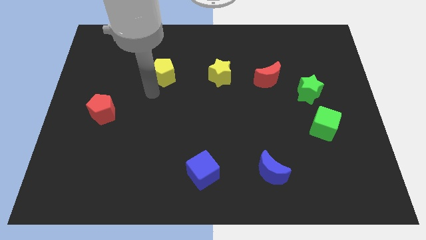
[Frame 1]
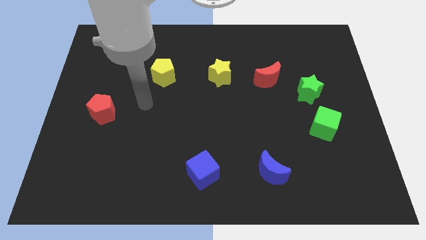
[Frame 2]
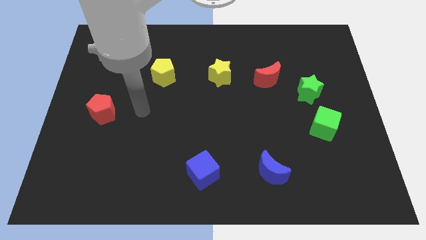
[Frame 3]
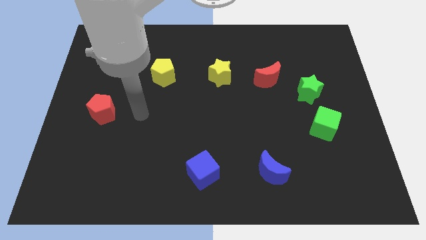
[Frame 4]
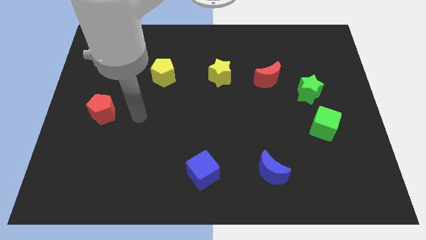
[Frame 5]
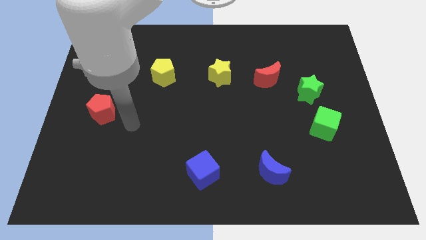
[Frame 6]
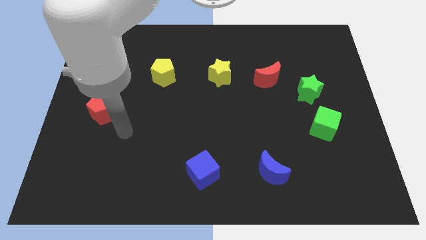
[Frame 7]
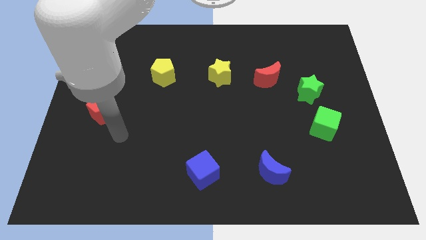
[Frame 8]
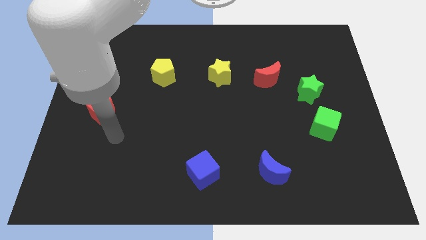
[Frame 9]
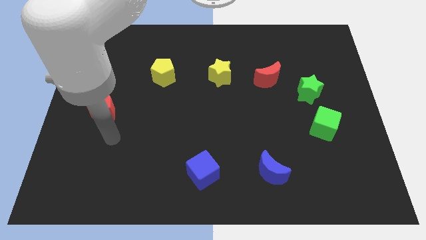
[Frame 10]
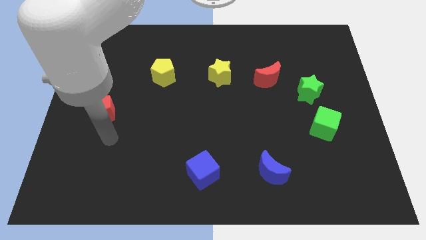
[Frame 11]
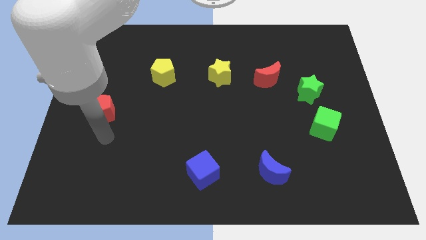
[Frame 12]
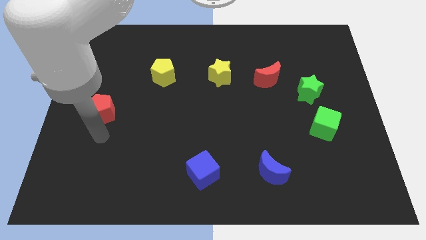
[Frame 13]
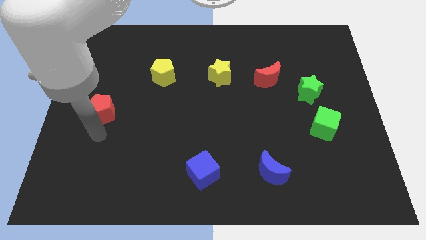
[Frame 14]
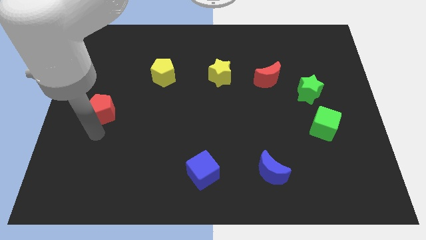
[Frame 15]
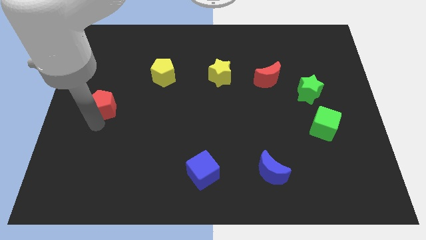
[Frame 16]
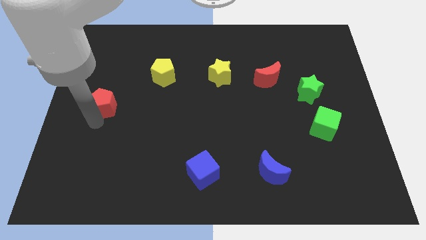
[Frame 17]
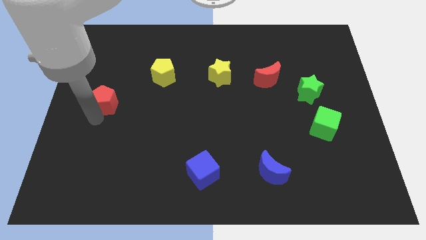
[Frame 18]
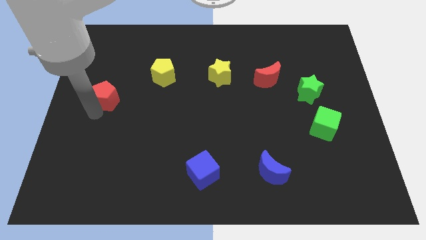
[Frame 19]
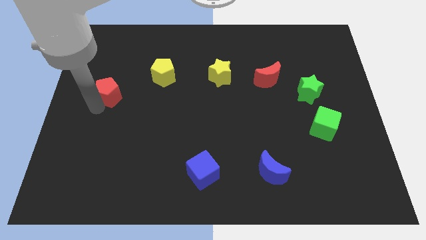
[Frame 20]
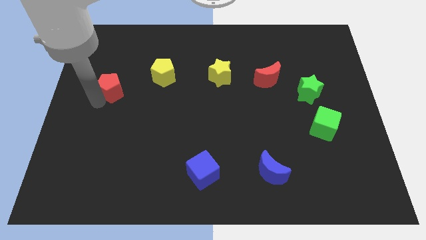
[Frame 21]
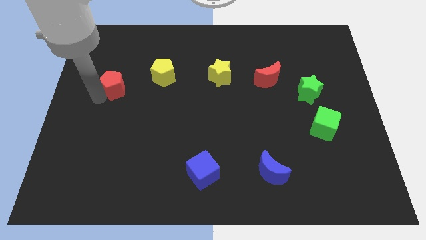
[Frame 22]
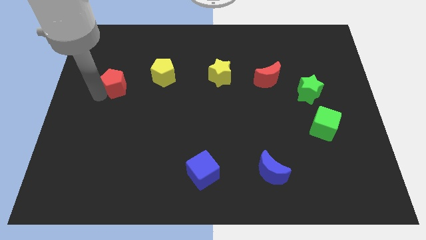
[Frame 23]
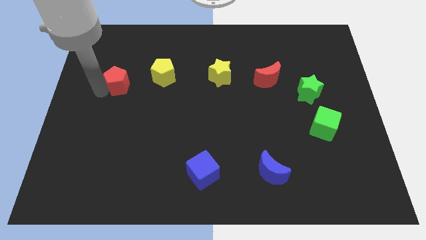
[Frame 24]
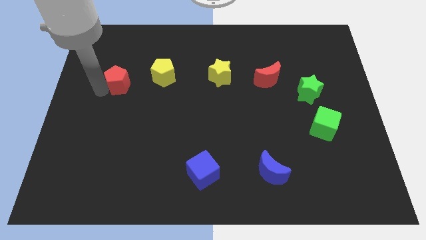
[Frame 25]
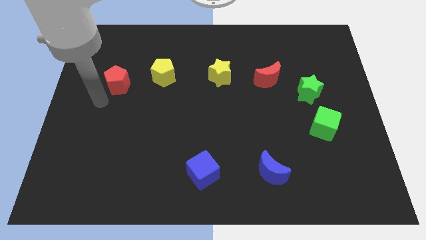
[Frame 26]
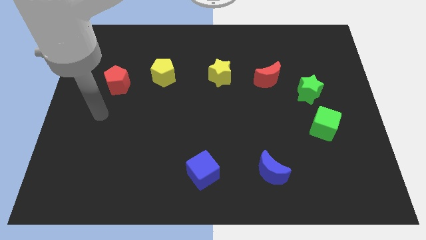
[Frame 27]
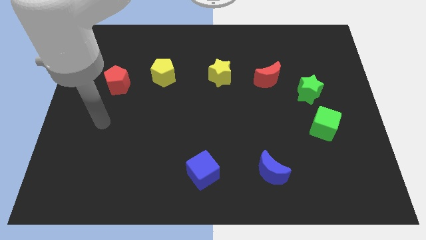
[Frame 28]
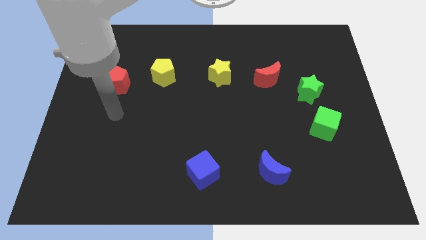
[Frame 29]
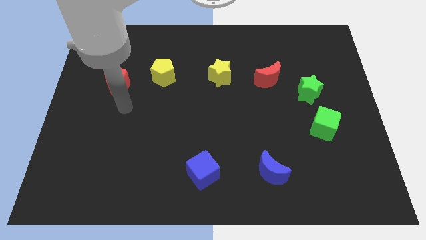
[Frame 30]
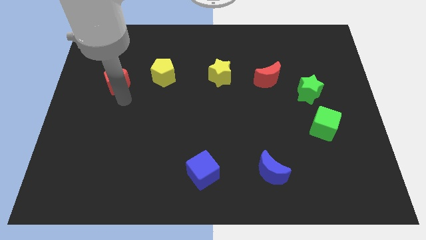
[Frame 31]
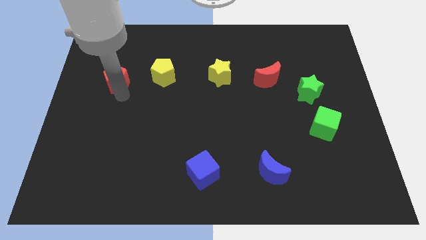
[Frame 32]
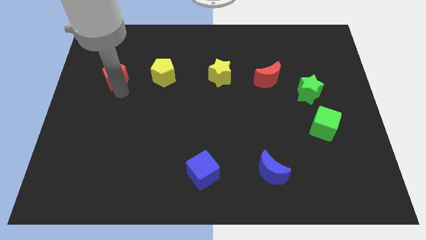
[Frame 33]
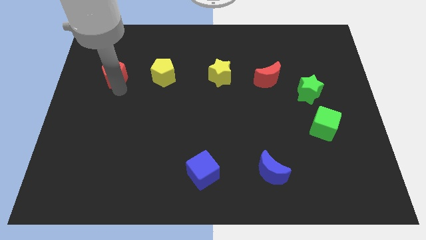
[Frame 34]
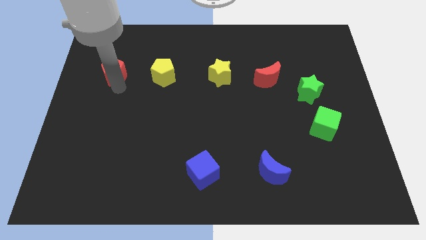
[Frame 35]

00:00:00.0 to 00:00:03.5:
place the red pentagon parallel to yellow pentagon

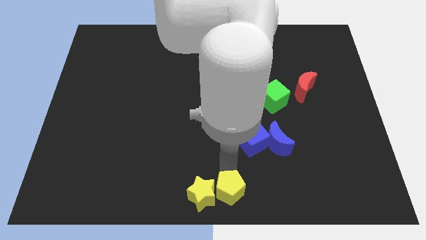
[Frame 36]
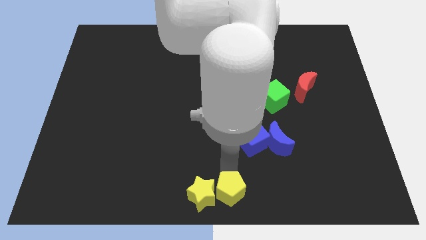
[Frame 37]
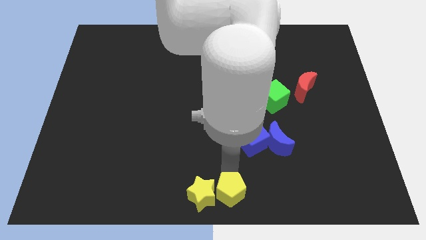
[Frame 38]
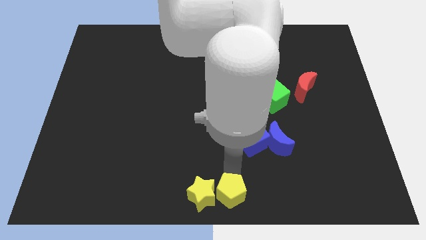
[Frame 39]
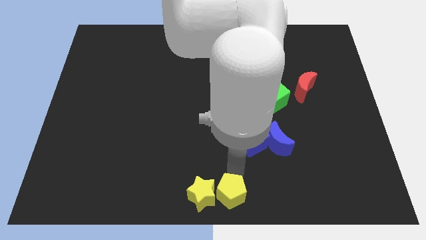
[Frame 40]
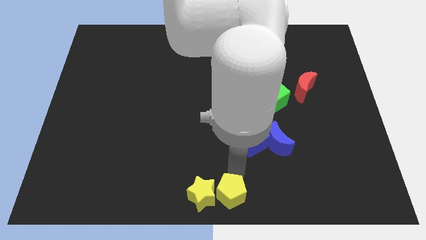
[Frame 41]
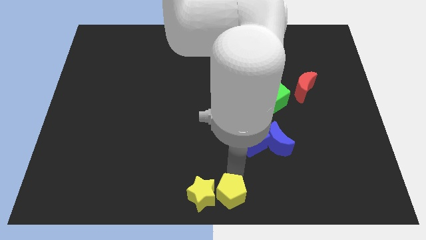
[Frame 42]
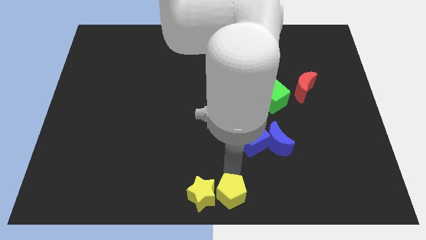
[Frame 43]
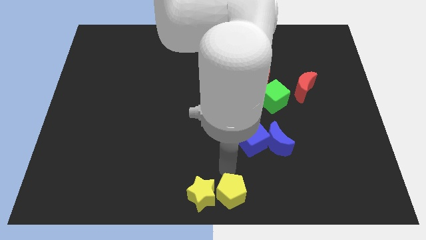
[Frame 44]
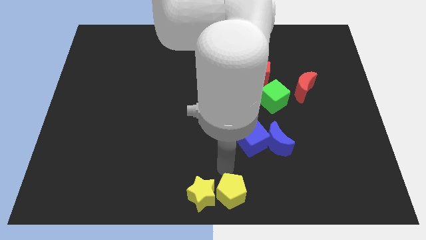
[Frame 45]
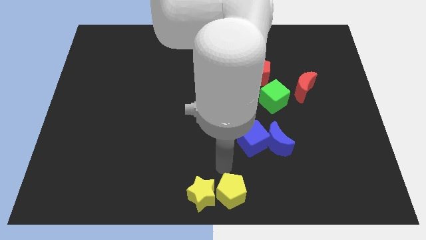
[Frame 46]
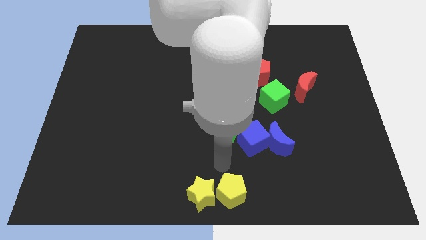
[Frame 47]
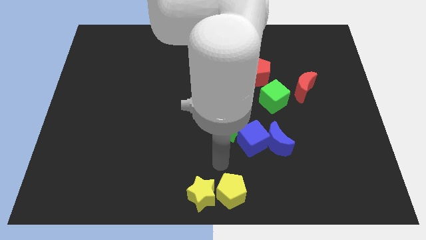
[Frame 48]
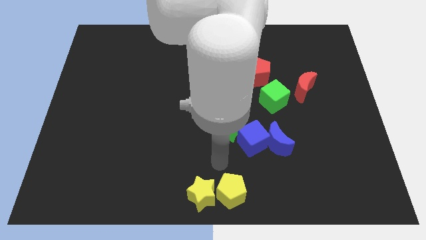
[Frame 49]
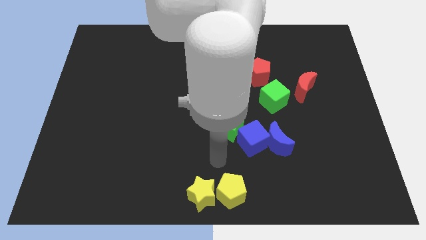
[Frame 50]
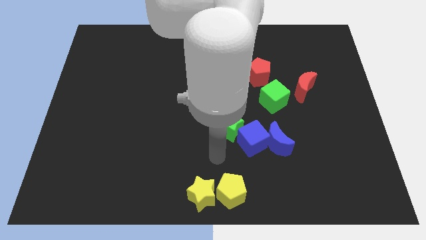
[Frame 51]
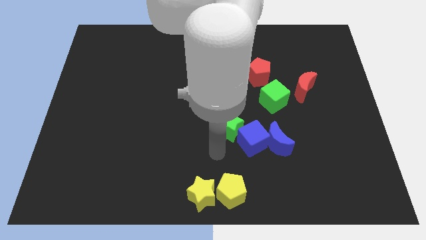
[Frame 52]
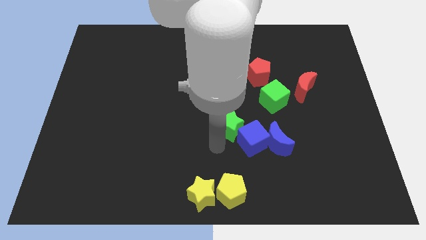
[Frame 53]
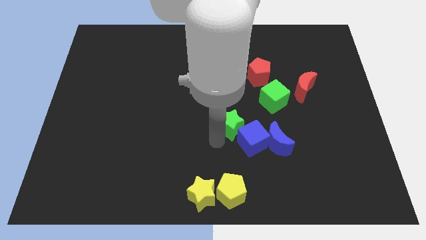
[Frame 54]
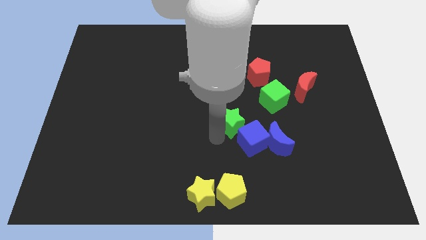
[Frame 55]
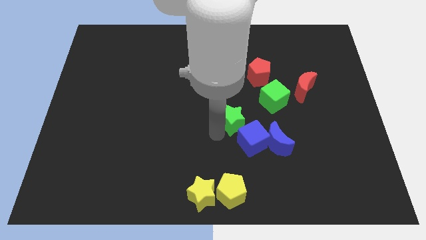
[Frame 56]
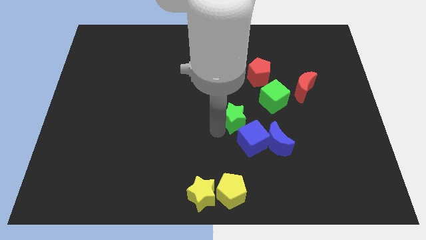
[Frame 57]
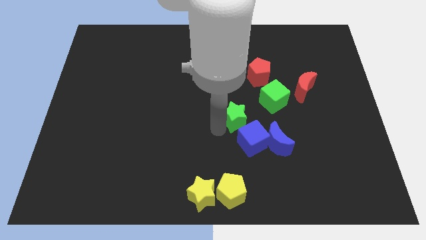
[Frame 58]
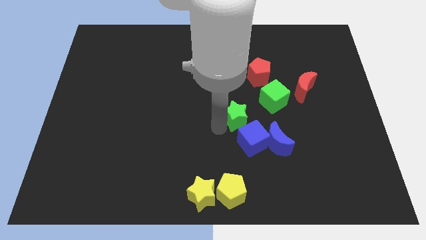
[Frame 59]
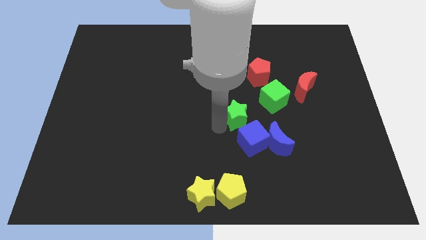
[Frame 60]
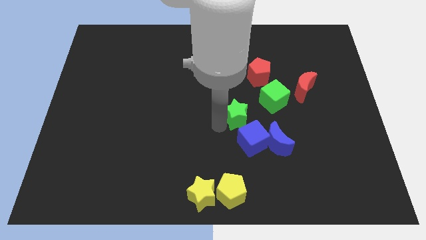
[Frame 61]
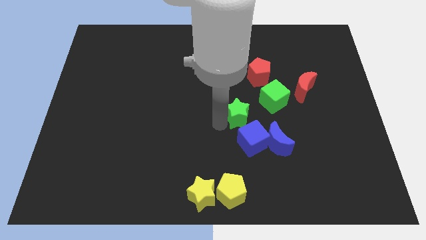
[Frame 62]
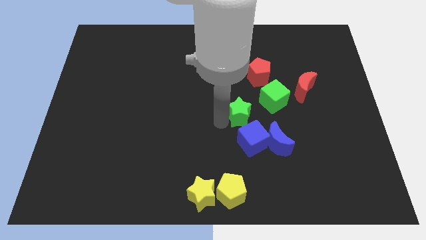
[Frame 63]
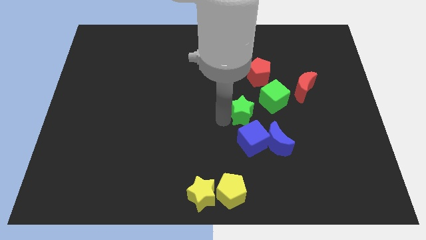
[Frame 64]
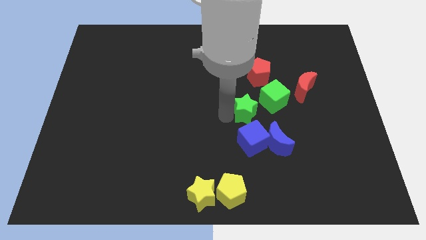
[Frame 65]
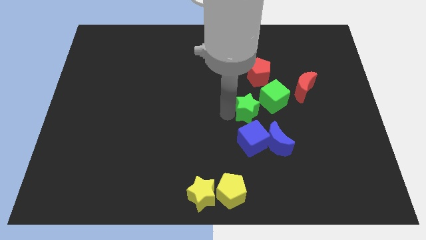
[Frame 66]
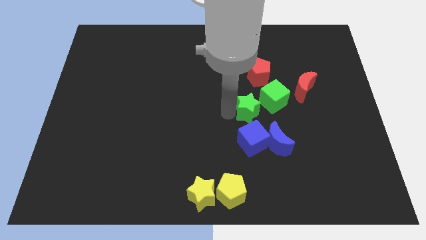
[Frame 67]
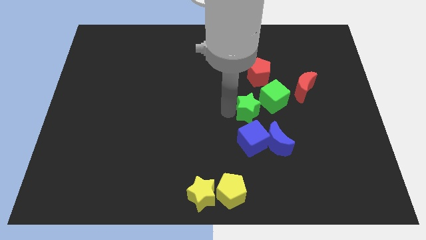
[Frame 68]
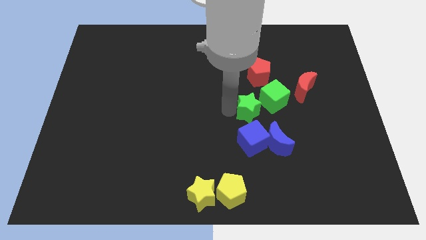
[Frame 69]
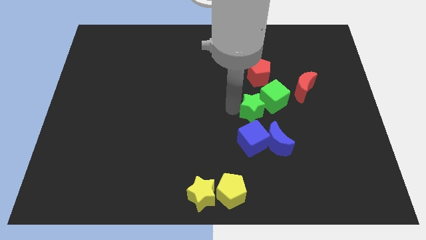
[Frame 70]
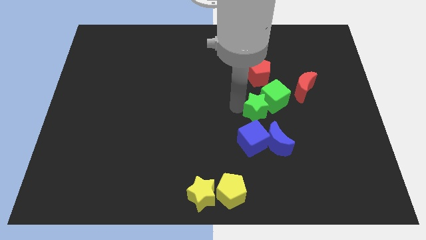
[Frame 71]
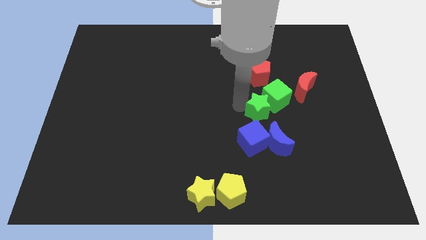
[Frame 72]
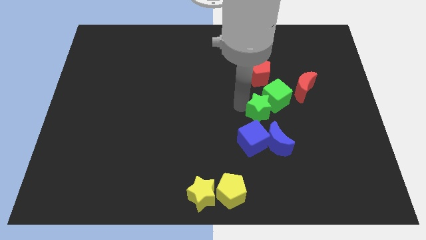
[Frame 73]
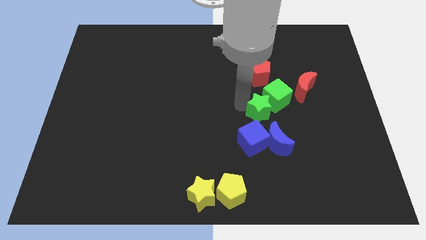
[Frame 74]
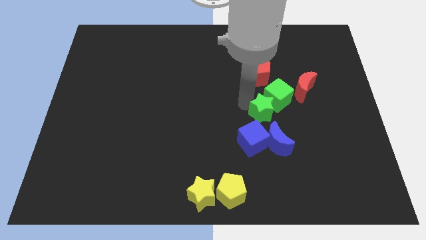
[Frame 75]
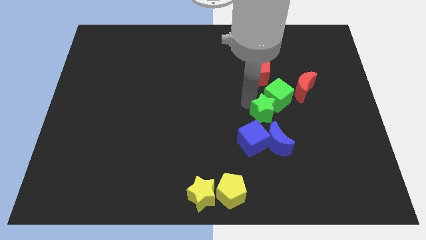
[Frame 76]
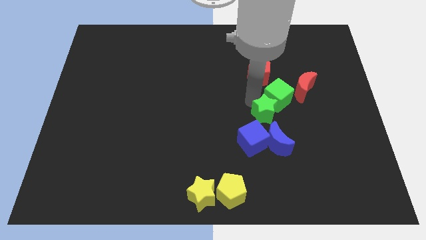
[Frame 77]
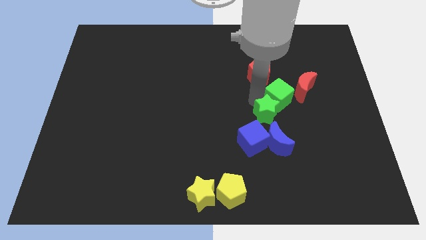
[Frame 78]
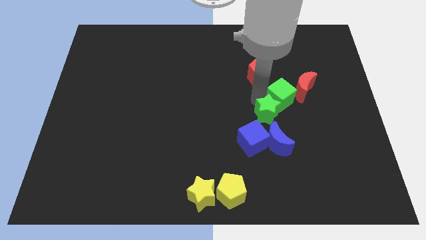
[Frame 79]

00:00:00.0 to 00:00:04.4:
move the green star into the green cube

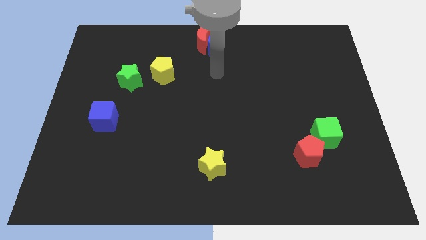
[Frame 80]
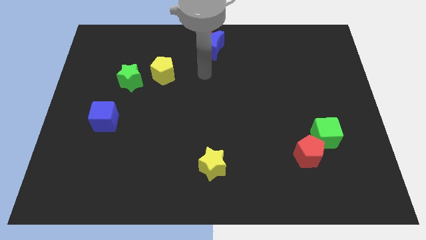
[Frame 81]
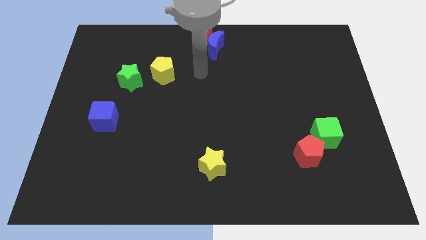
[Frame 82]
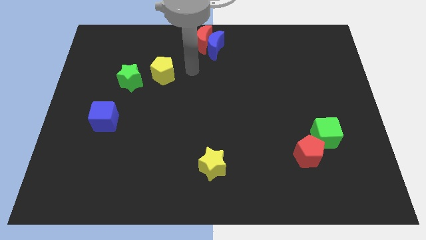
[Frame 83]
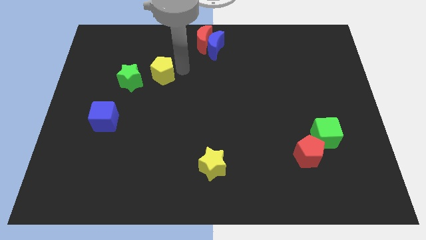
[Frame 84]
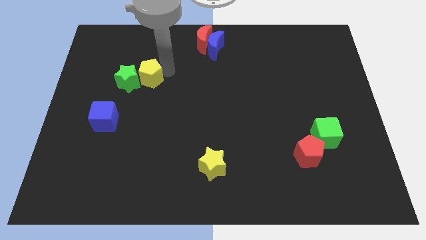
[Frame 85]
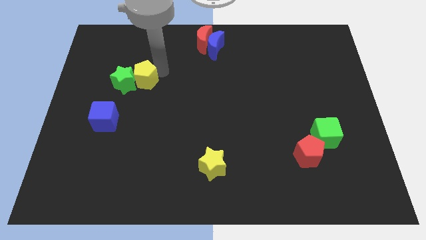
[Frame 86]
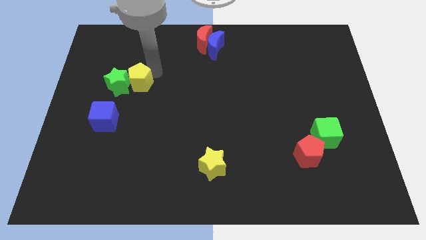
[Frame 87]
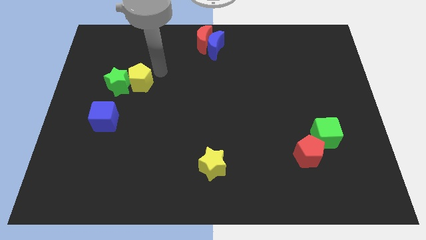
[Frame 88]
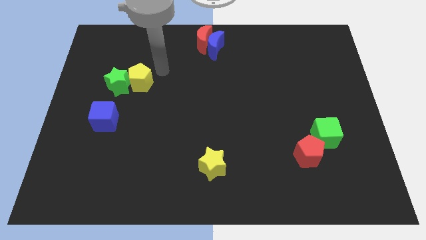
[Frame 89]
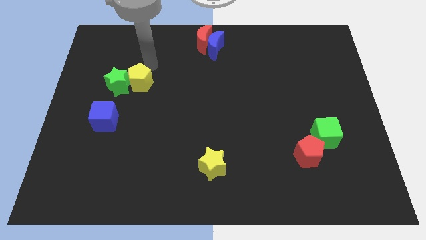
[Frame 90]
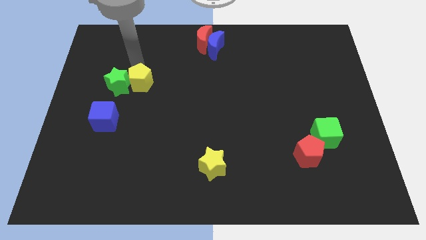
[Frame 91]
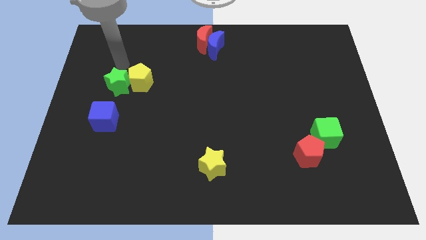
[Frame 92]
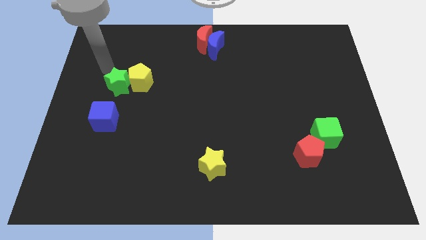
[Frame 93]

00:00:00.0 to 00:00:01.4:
push the yellow pentagon into the green star
